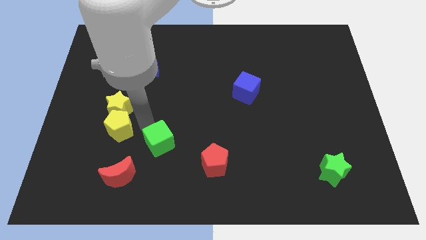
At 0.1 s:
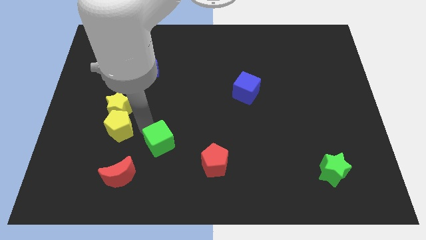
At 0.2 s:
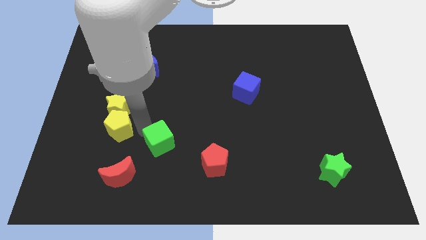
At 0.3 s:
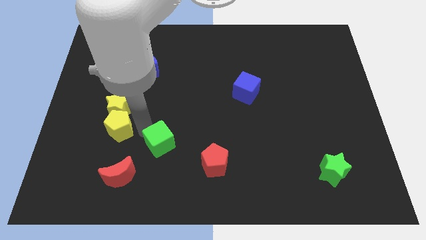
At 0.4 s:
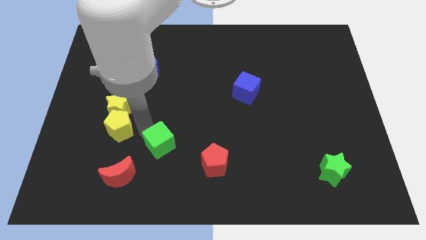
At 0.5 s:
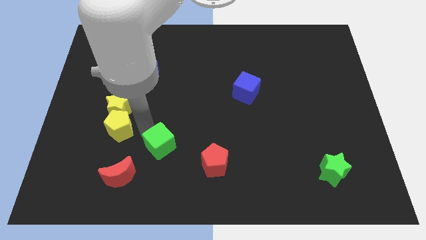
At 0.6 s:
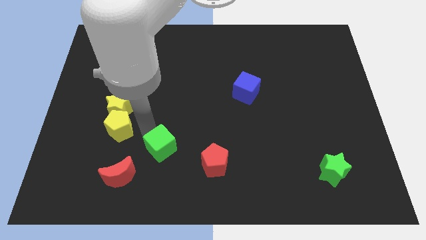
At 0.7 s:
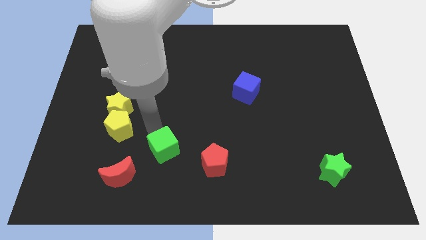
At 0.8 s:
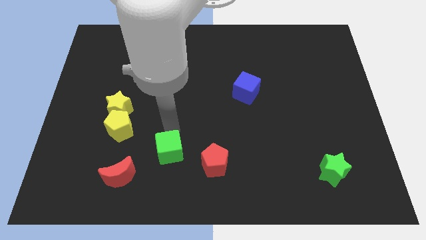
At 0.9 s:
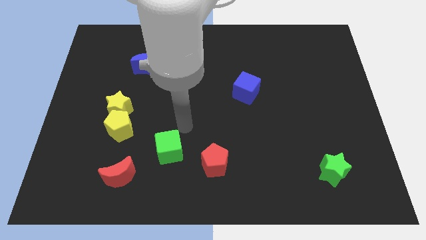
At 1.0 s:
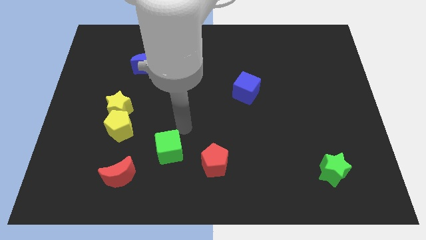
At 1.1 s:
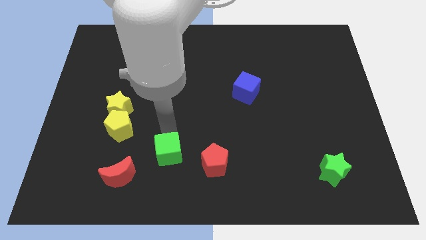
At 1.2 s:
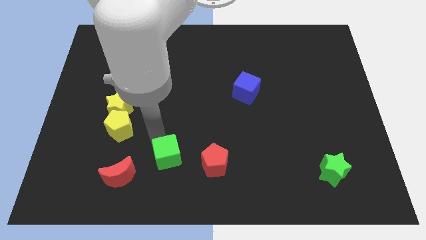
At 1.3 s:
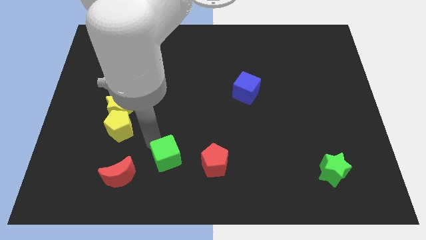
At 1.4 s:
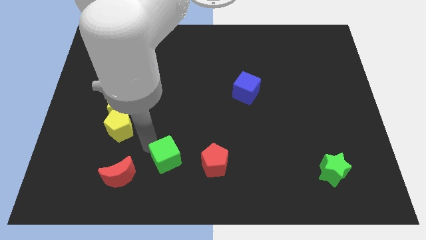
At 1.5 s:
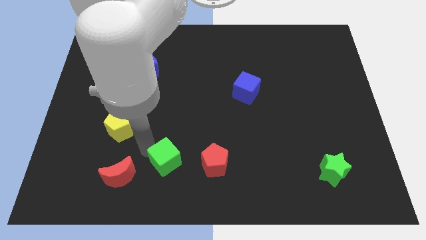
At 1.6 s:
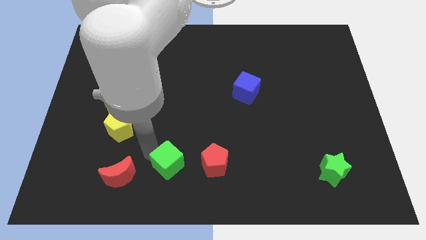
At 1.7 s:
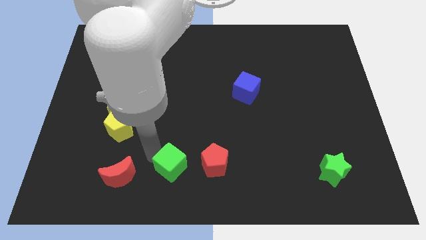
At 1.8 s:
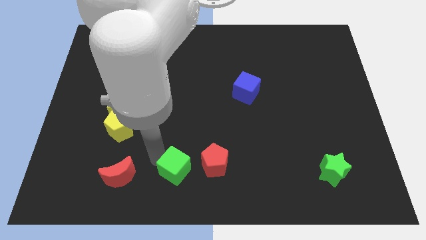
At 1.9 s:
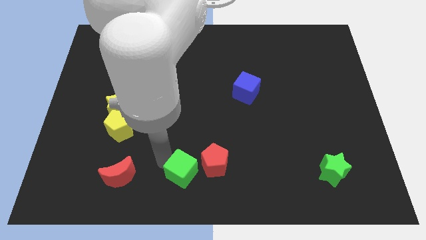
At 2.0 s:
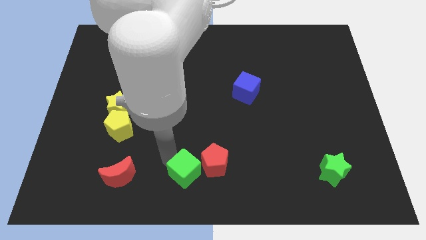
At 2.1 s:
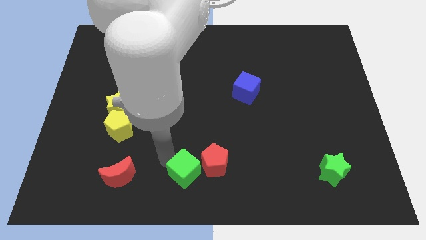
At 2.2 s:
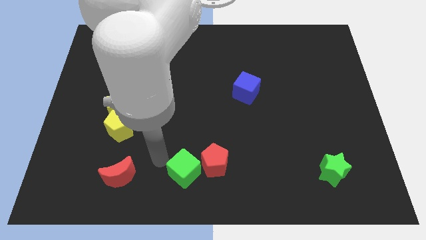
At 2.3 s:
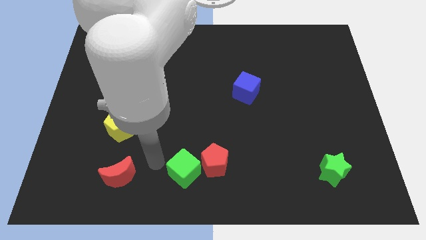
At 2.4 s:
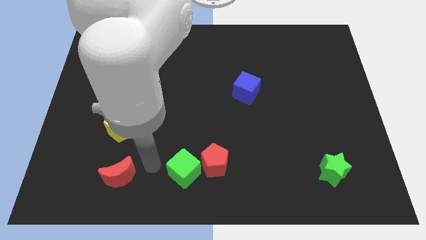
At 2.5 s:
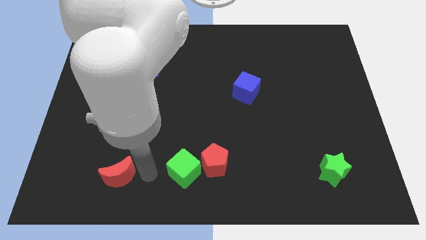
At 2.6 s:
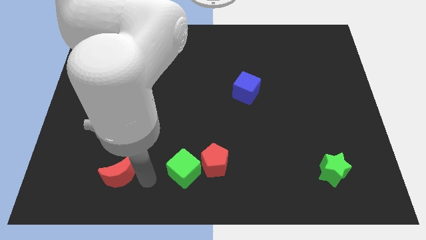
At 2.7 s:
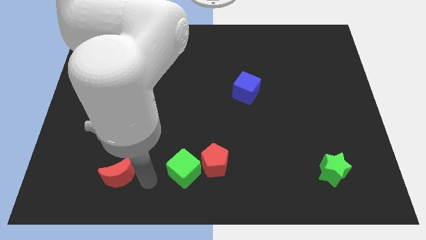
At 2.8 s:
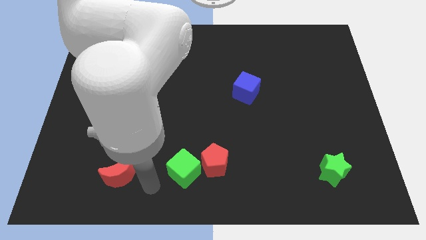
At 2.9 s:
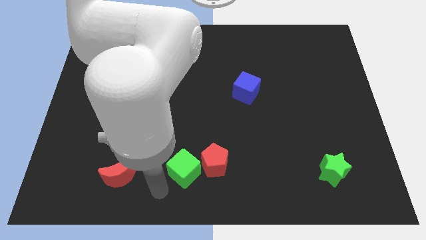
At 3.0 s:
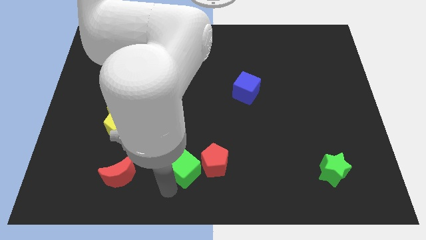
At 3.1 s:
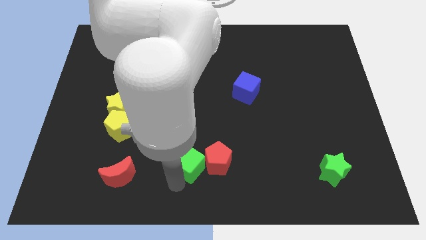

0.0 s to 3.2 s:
place the green cube to the left side of red pentagon

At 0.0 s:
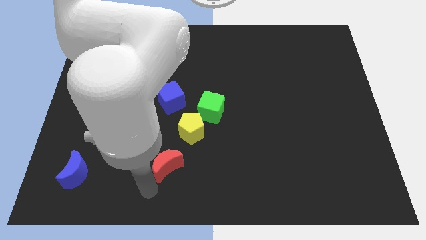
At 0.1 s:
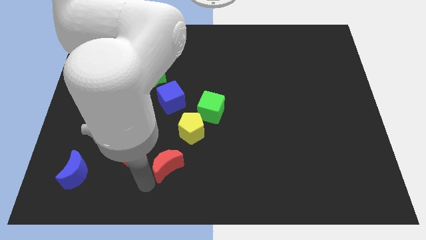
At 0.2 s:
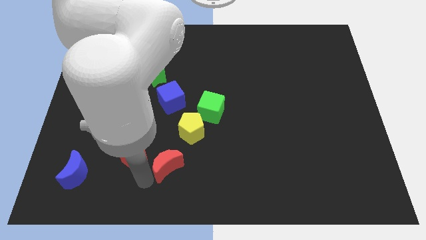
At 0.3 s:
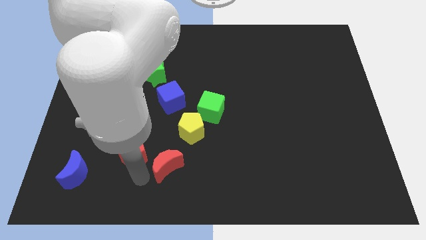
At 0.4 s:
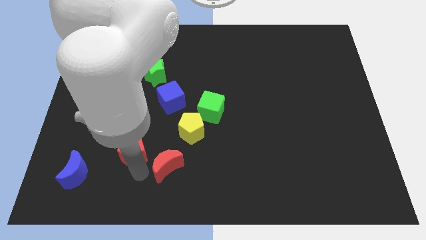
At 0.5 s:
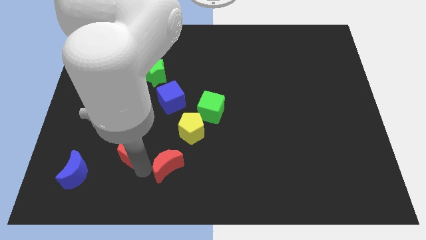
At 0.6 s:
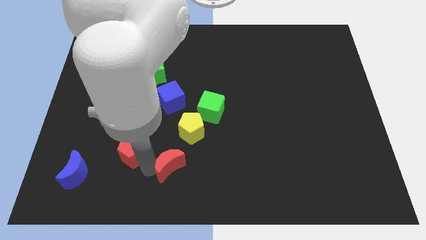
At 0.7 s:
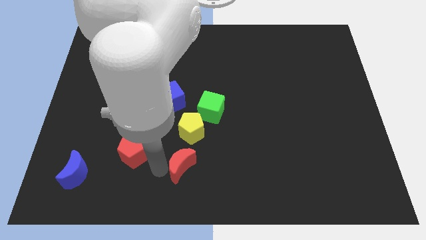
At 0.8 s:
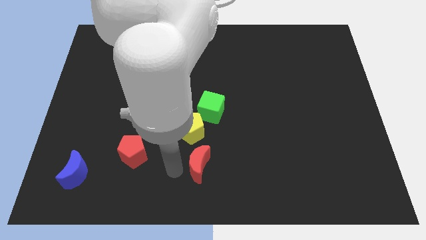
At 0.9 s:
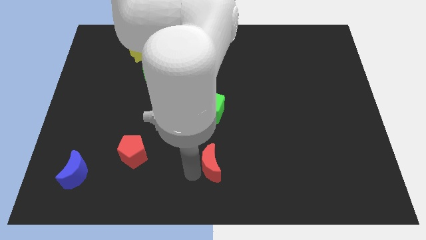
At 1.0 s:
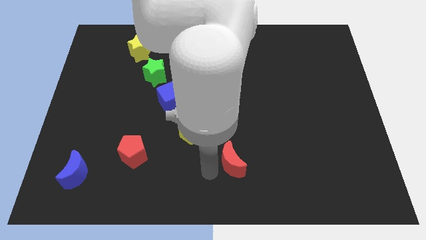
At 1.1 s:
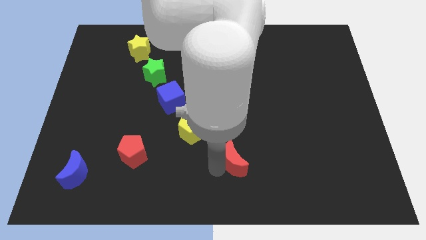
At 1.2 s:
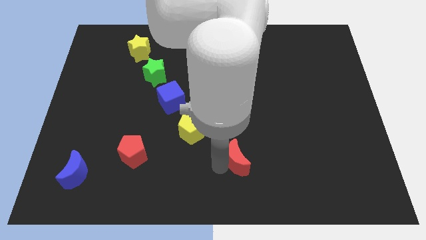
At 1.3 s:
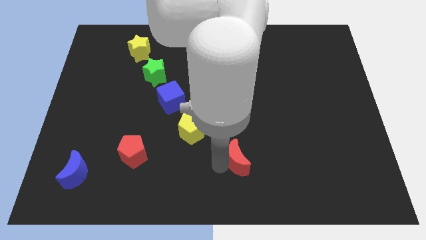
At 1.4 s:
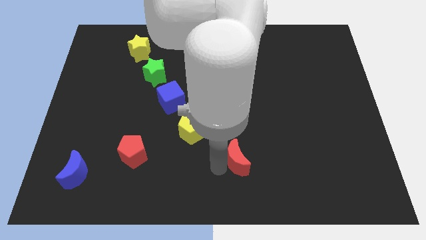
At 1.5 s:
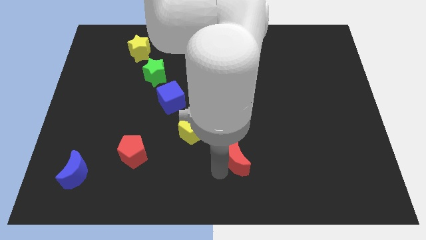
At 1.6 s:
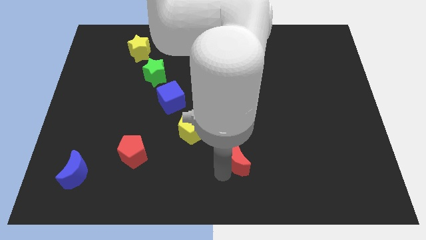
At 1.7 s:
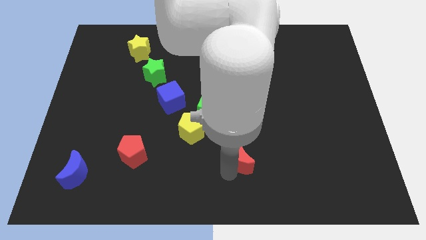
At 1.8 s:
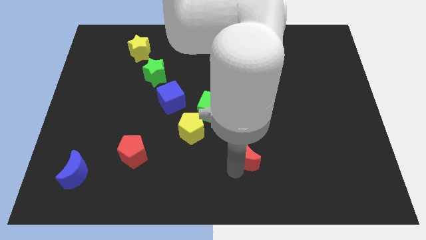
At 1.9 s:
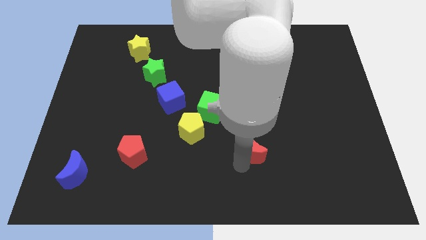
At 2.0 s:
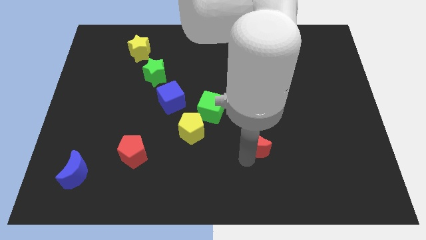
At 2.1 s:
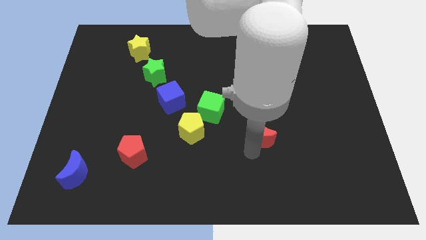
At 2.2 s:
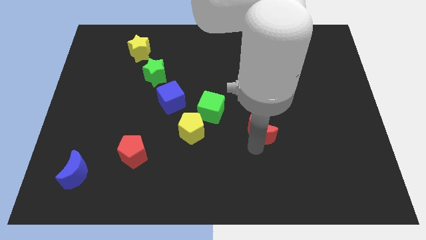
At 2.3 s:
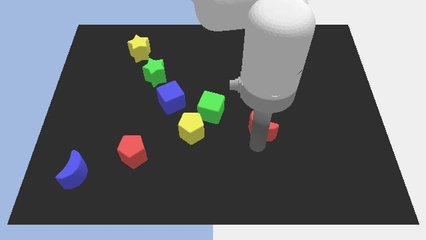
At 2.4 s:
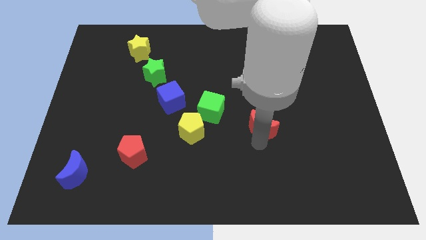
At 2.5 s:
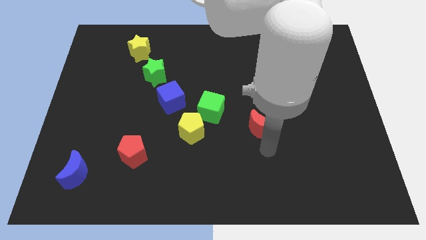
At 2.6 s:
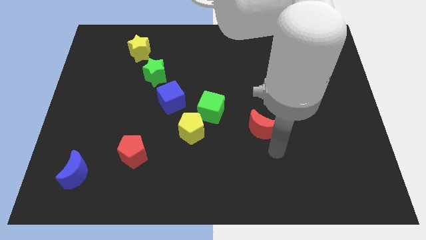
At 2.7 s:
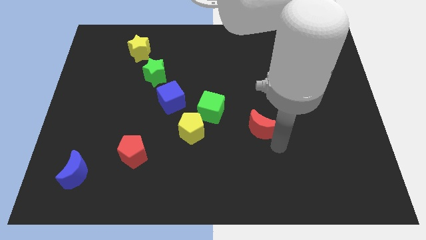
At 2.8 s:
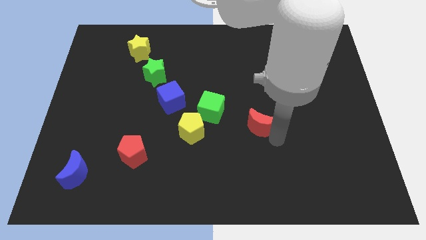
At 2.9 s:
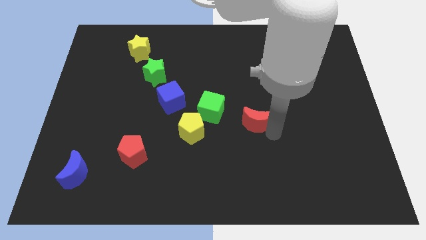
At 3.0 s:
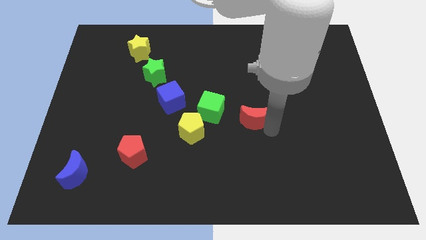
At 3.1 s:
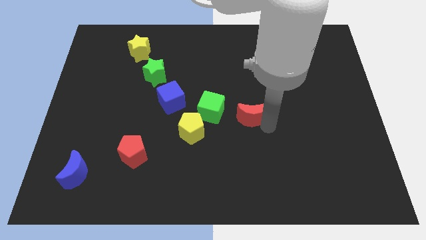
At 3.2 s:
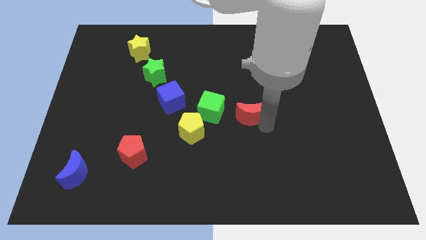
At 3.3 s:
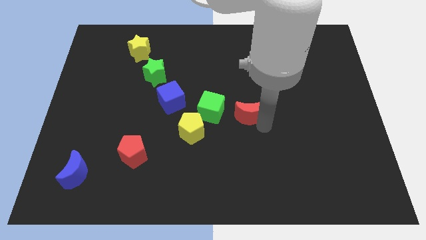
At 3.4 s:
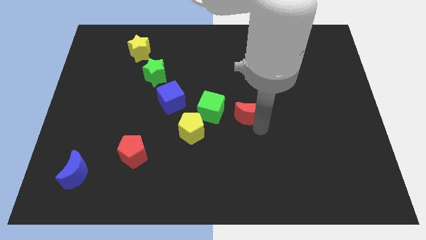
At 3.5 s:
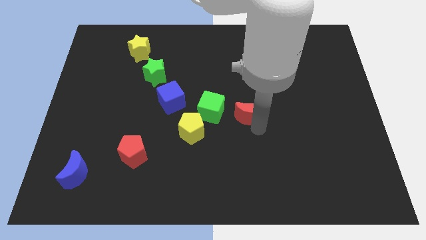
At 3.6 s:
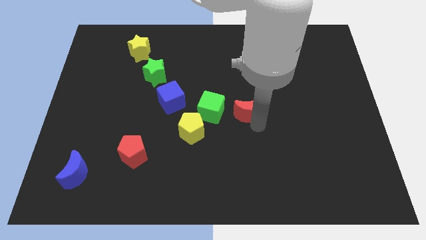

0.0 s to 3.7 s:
move the red moon at the right side of the green cube

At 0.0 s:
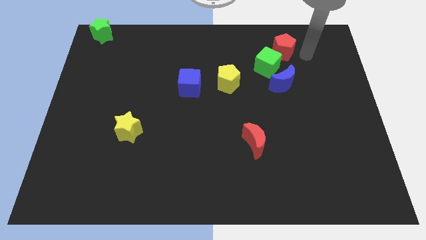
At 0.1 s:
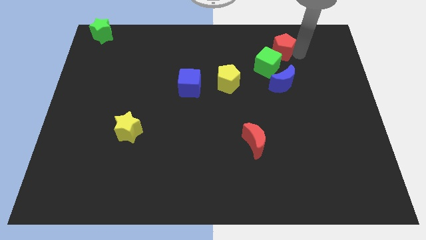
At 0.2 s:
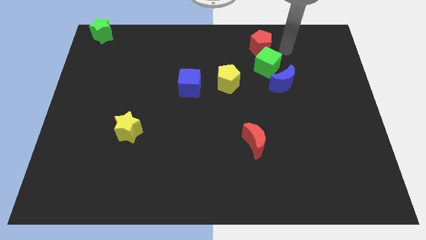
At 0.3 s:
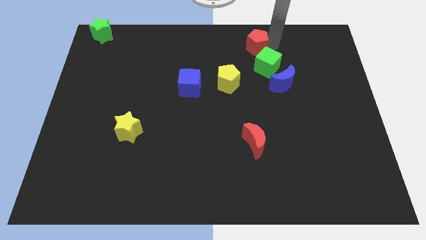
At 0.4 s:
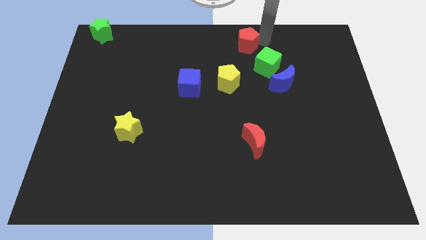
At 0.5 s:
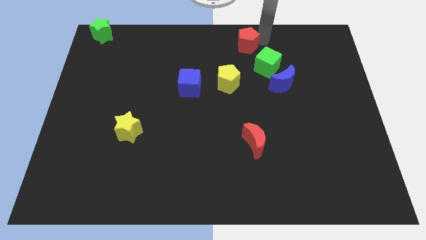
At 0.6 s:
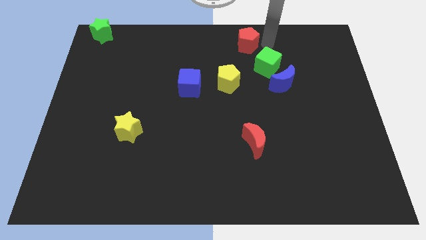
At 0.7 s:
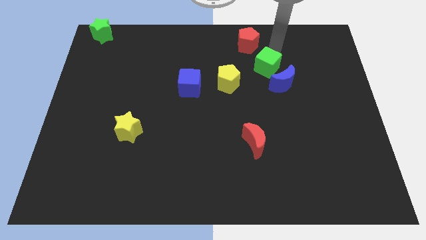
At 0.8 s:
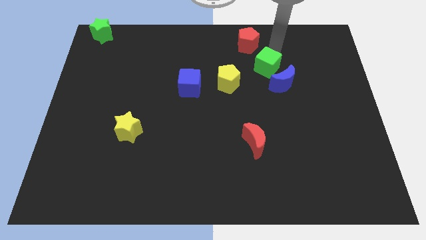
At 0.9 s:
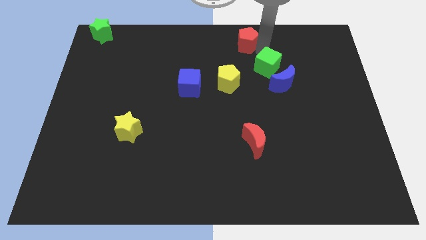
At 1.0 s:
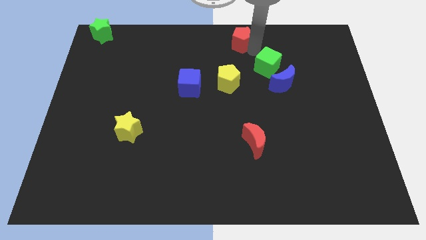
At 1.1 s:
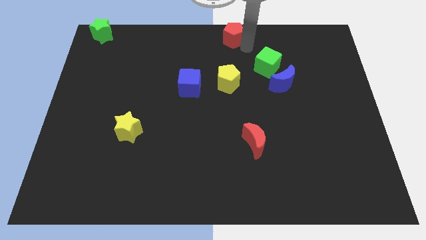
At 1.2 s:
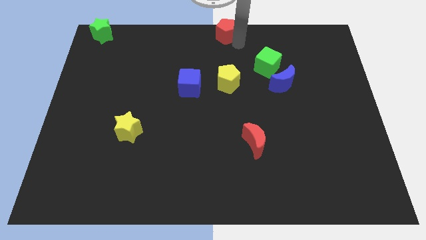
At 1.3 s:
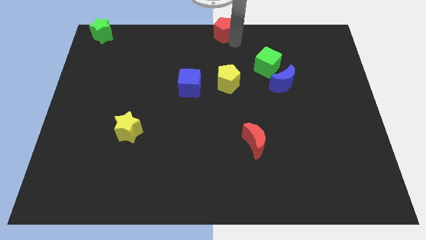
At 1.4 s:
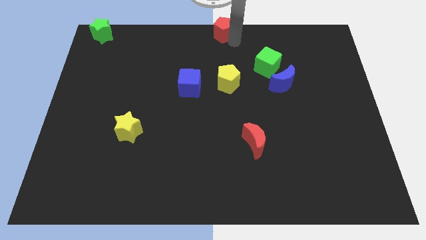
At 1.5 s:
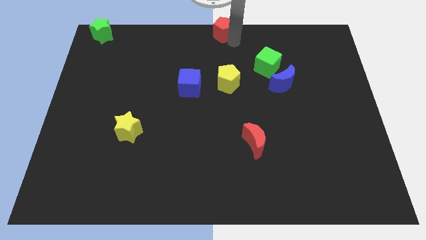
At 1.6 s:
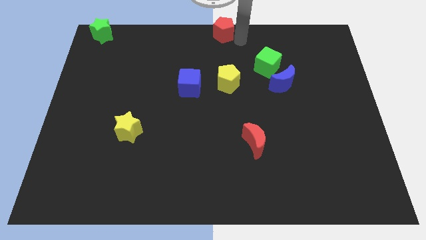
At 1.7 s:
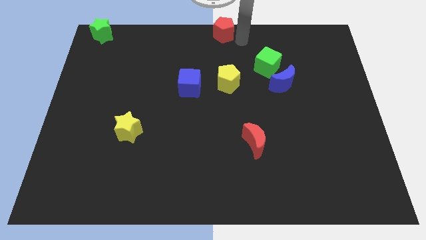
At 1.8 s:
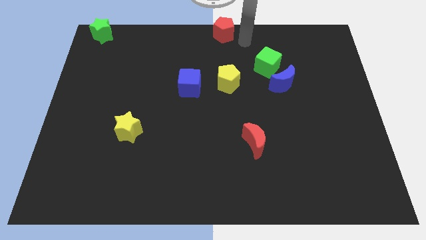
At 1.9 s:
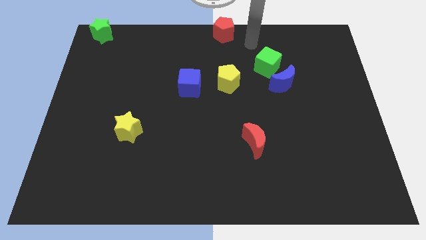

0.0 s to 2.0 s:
slide the red pentagon to the top center of the board
